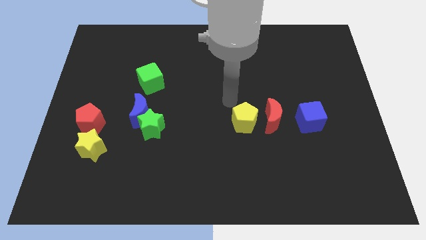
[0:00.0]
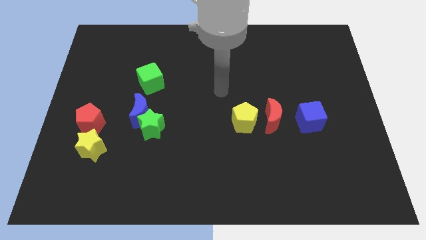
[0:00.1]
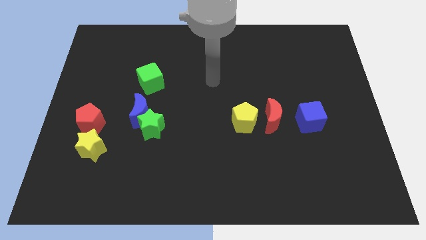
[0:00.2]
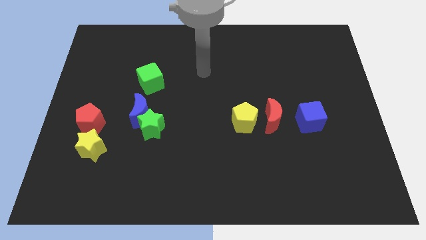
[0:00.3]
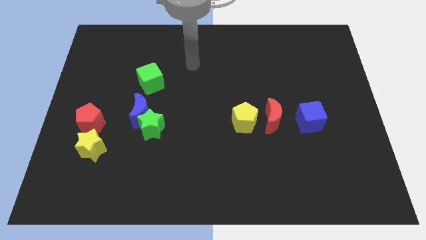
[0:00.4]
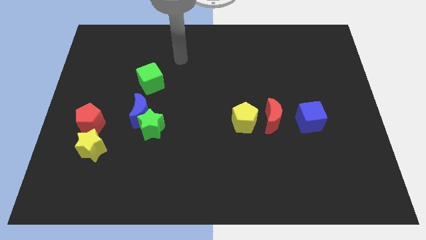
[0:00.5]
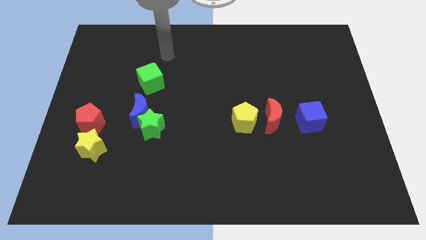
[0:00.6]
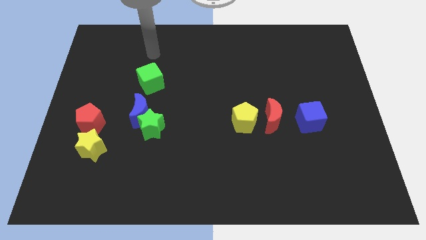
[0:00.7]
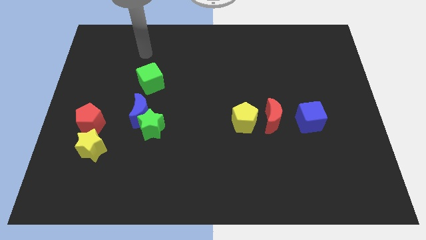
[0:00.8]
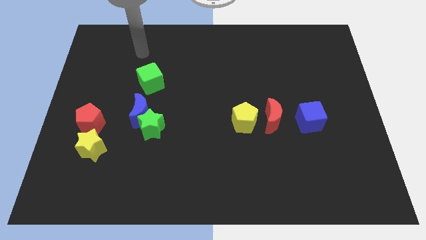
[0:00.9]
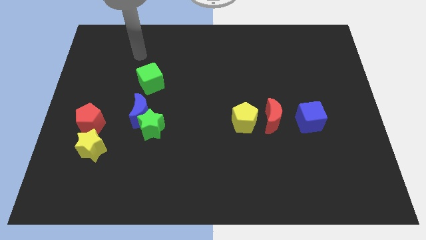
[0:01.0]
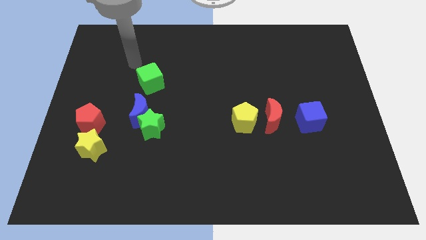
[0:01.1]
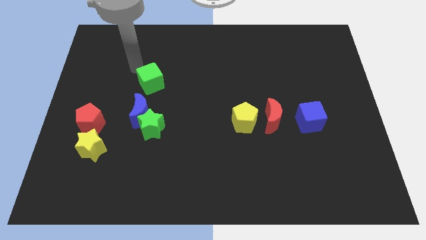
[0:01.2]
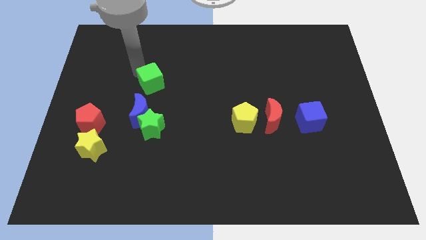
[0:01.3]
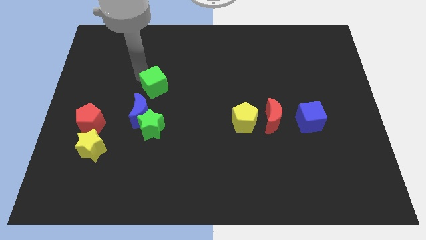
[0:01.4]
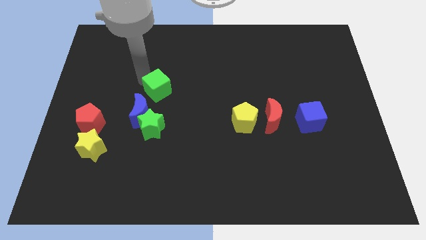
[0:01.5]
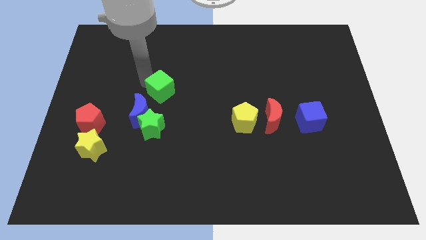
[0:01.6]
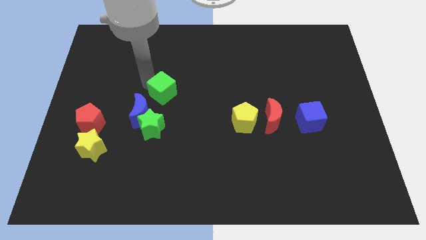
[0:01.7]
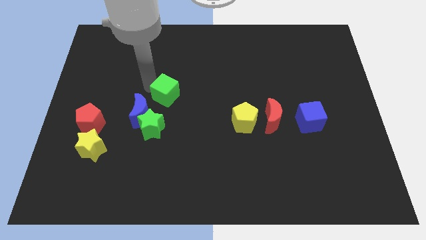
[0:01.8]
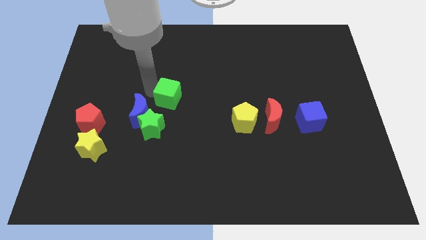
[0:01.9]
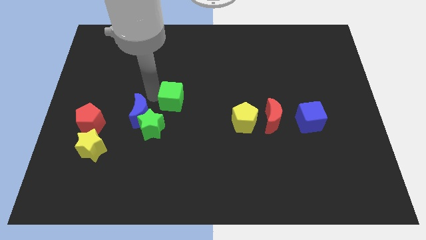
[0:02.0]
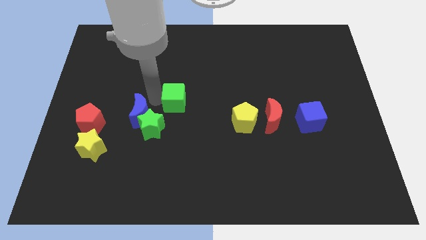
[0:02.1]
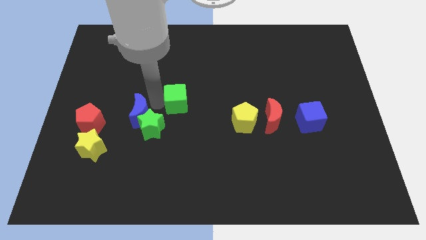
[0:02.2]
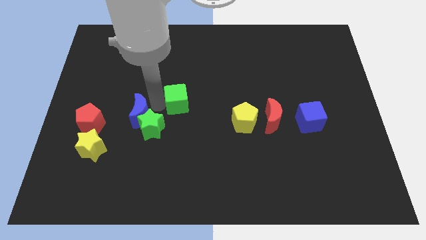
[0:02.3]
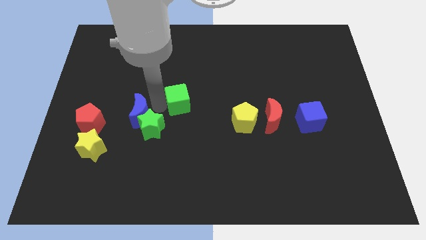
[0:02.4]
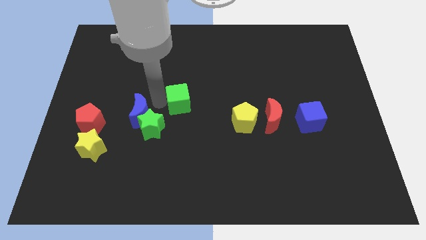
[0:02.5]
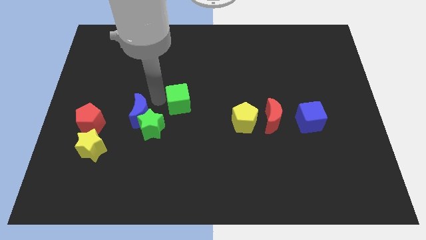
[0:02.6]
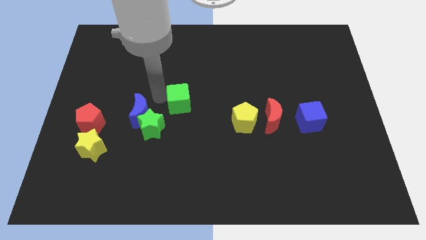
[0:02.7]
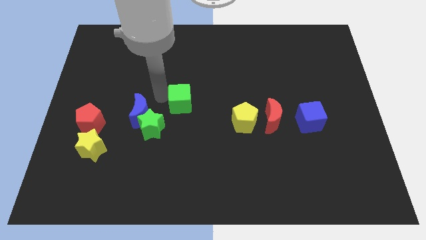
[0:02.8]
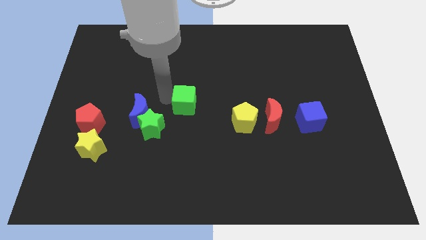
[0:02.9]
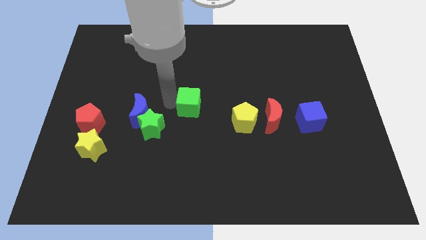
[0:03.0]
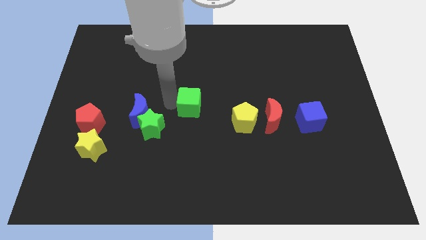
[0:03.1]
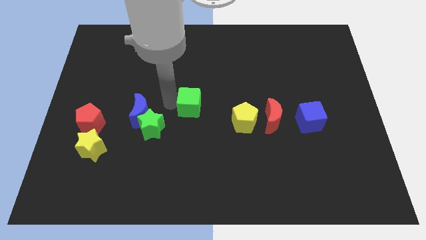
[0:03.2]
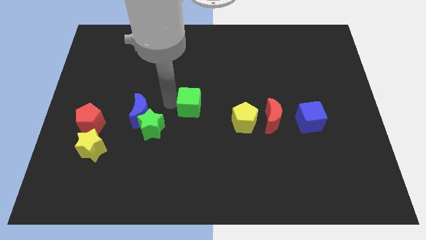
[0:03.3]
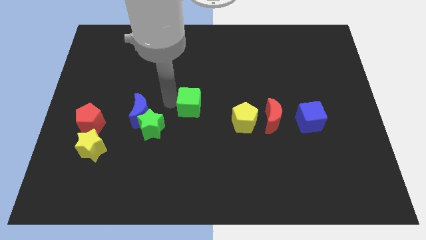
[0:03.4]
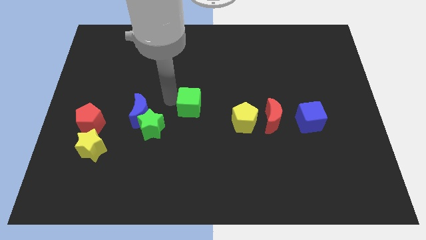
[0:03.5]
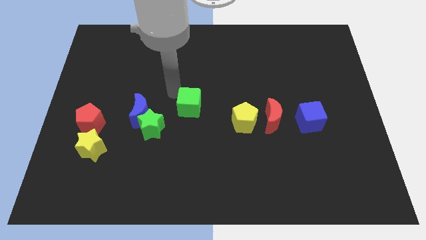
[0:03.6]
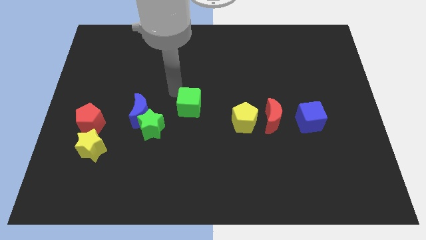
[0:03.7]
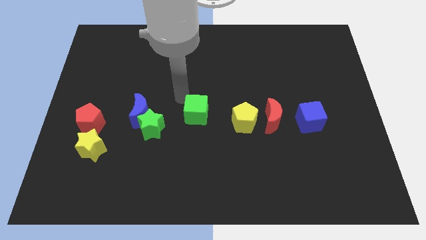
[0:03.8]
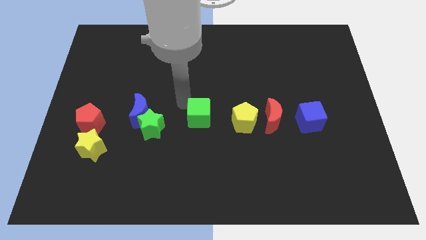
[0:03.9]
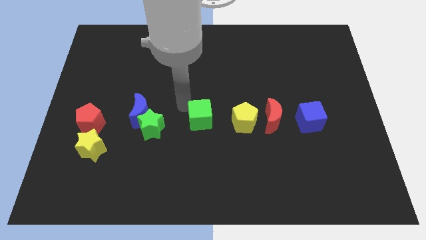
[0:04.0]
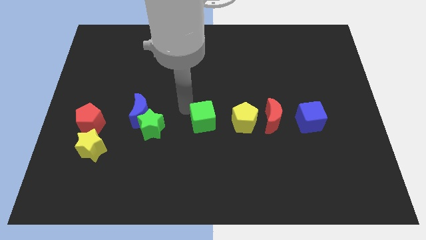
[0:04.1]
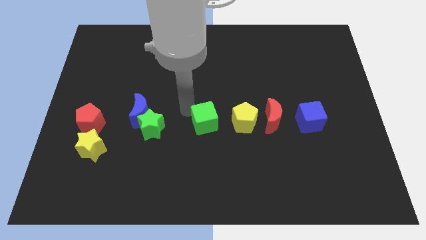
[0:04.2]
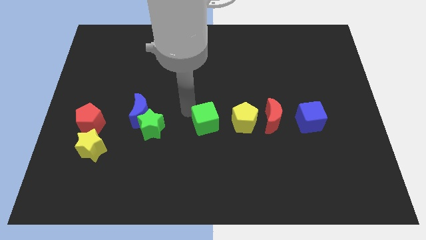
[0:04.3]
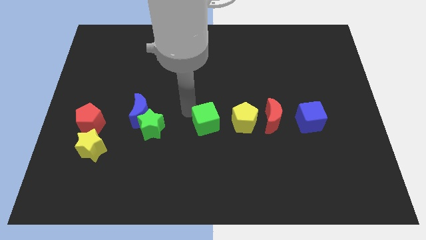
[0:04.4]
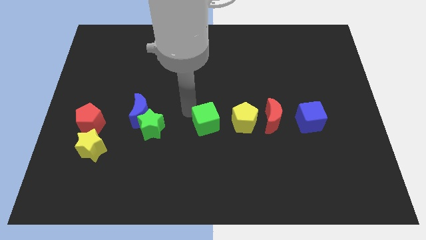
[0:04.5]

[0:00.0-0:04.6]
move the green cube in between the green star and the yellow pentagon

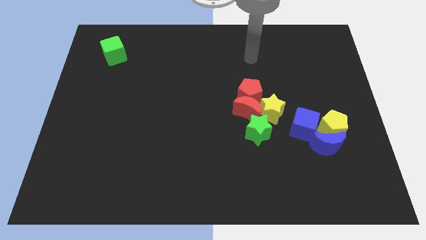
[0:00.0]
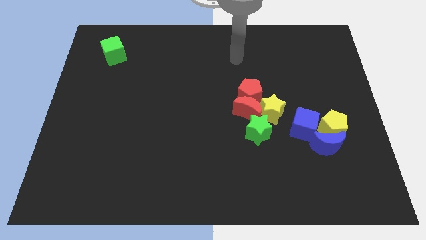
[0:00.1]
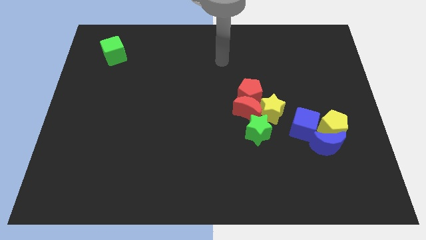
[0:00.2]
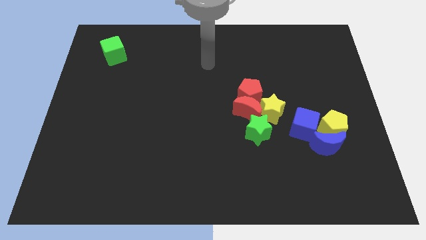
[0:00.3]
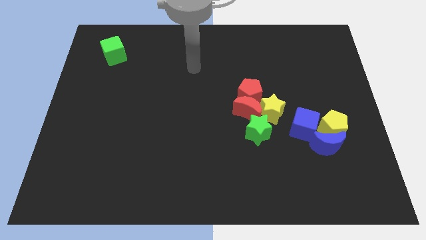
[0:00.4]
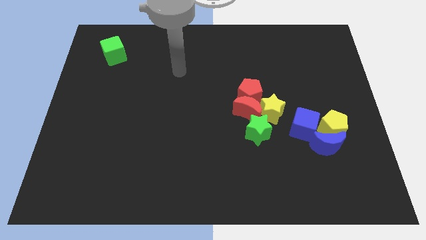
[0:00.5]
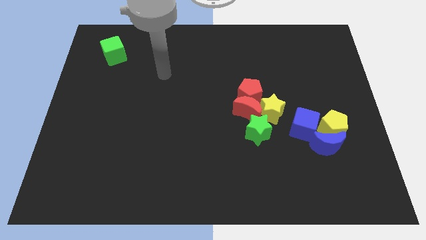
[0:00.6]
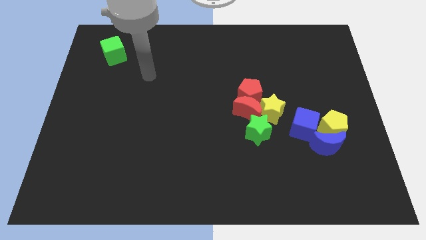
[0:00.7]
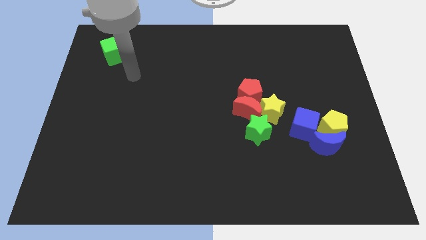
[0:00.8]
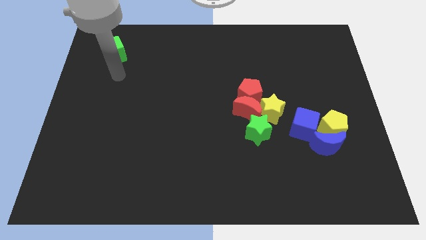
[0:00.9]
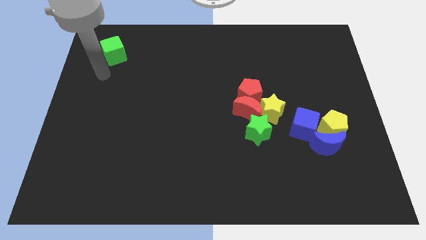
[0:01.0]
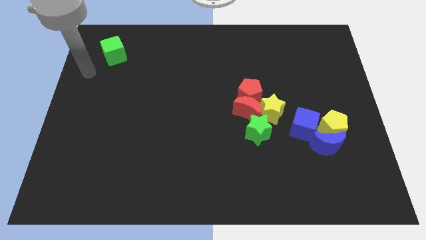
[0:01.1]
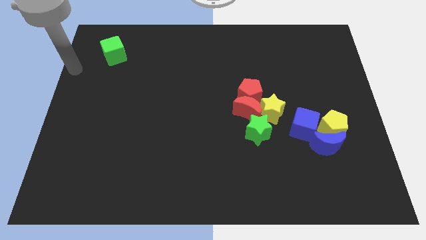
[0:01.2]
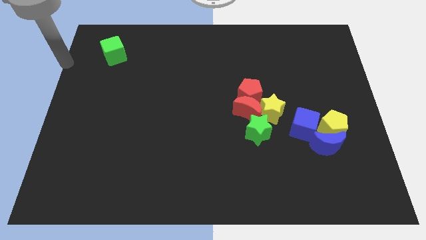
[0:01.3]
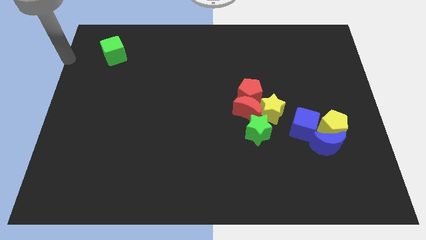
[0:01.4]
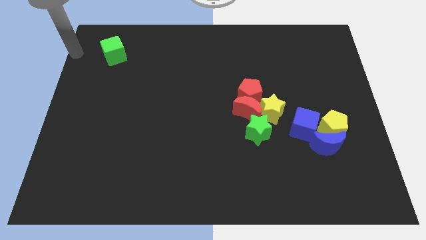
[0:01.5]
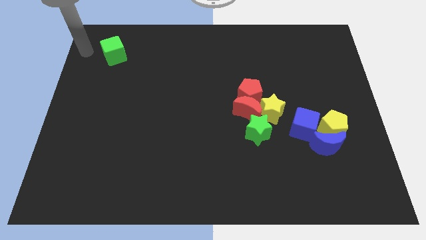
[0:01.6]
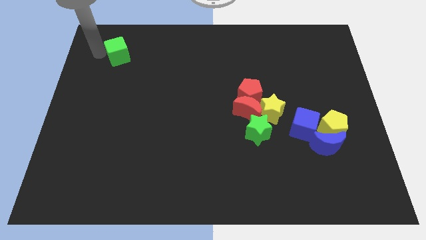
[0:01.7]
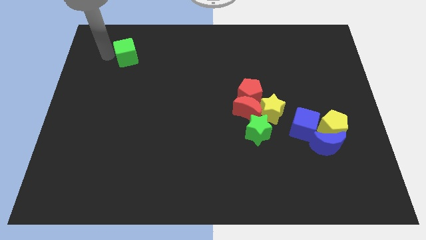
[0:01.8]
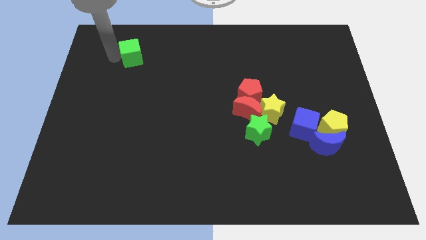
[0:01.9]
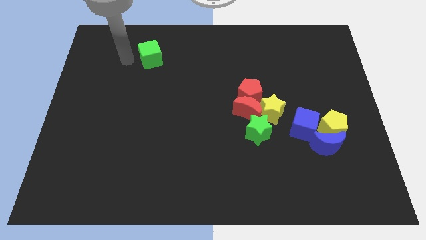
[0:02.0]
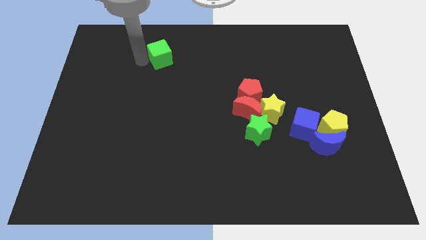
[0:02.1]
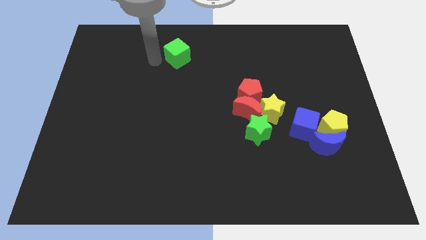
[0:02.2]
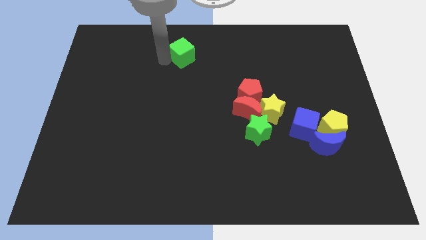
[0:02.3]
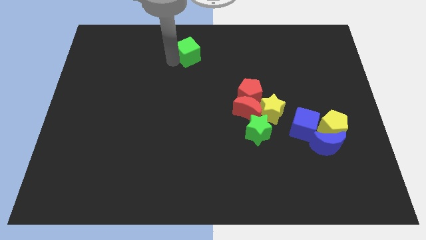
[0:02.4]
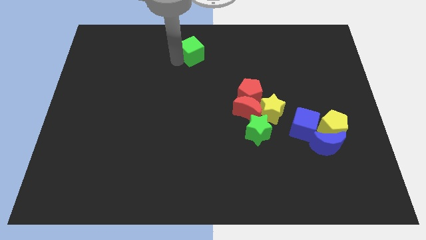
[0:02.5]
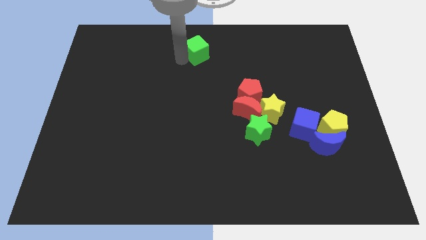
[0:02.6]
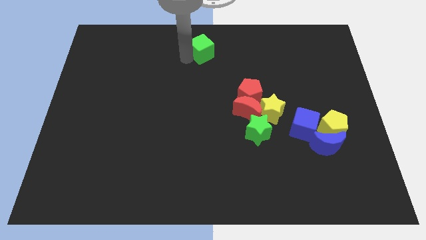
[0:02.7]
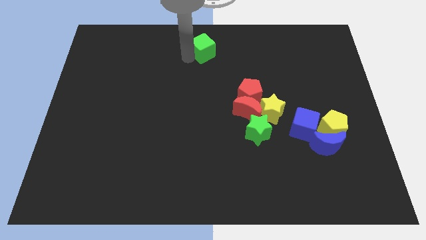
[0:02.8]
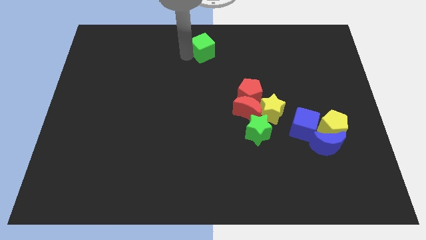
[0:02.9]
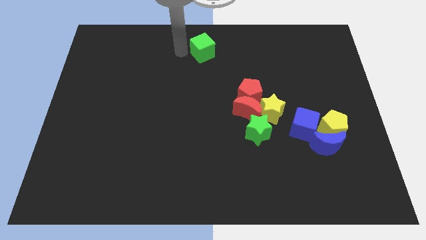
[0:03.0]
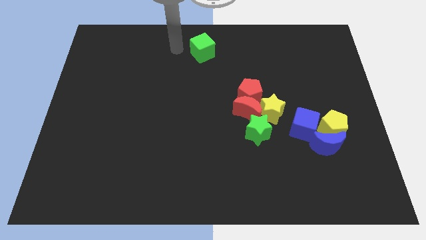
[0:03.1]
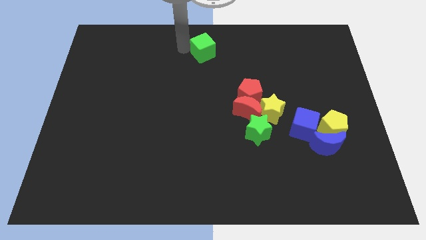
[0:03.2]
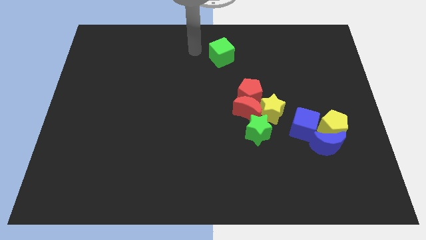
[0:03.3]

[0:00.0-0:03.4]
push the green cube to the top center of the board

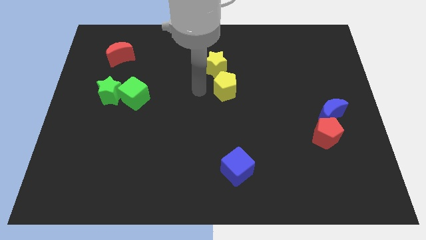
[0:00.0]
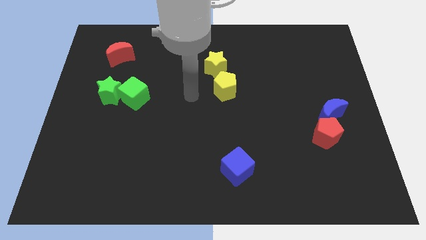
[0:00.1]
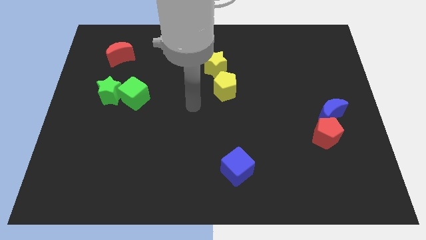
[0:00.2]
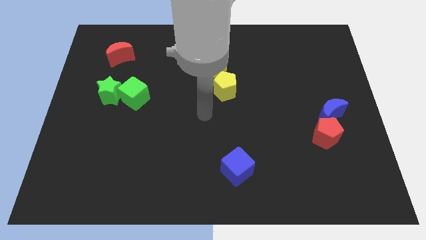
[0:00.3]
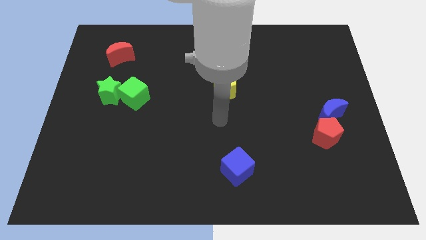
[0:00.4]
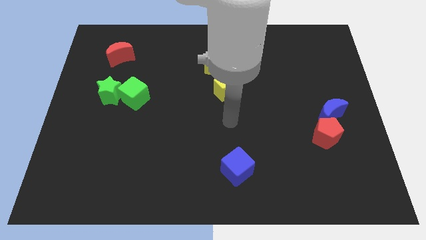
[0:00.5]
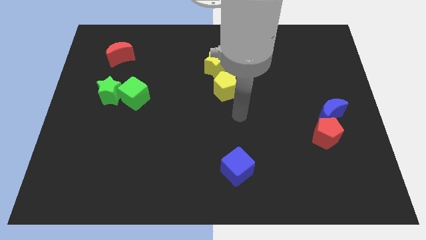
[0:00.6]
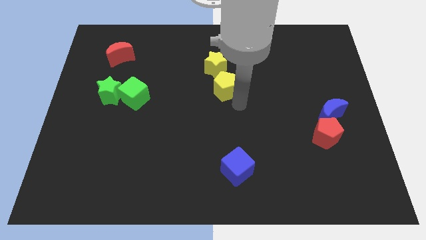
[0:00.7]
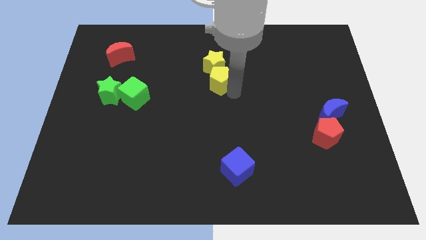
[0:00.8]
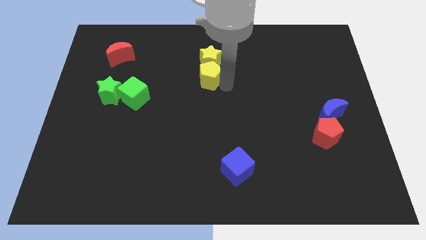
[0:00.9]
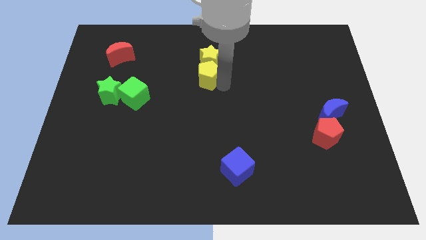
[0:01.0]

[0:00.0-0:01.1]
push the yellow pentagon into the yellow star
